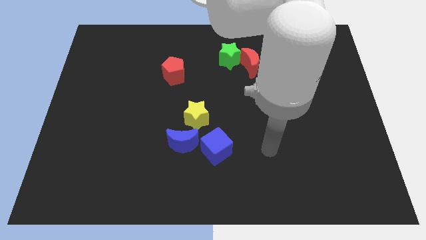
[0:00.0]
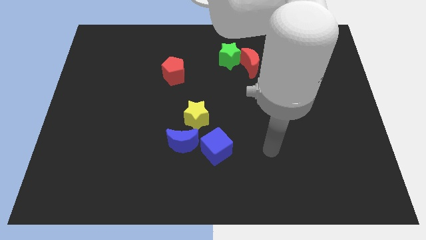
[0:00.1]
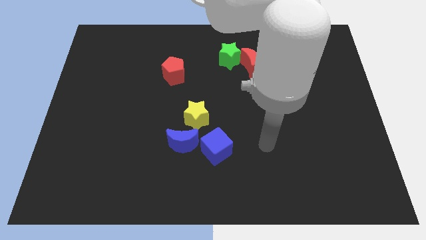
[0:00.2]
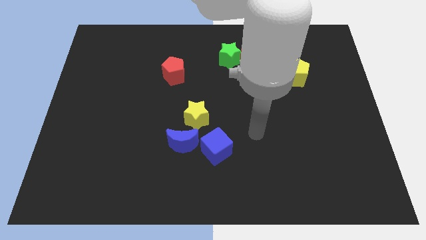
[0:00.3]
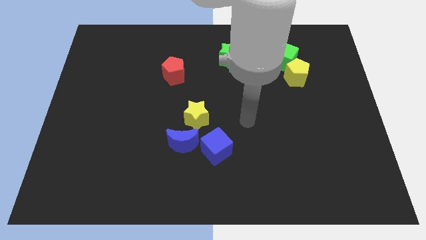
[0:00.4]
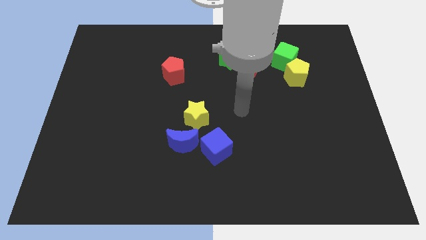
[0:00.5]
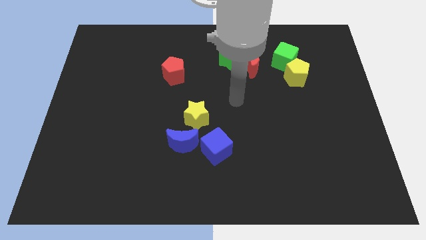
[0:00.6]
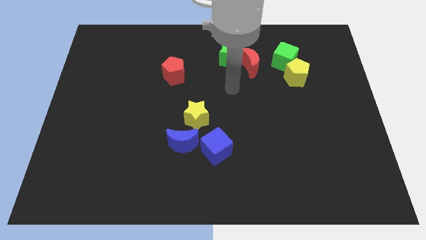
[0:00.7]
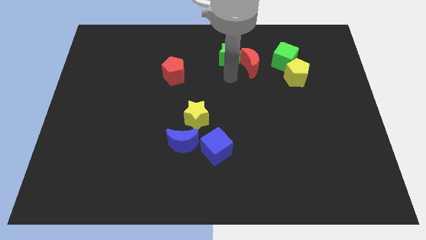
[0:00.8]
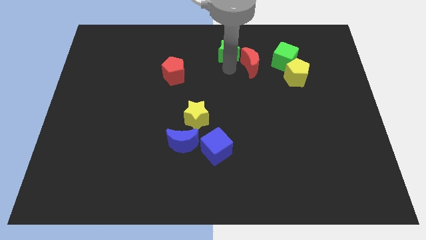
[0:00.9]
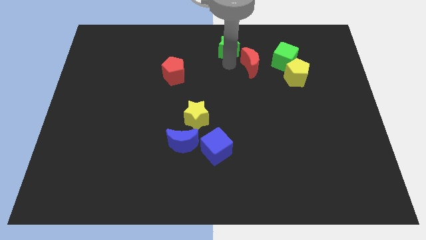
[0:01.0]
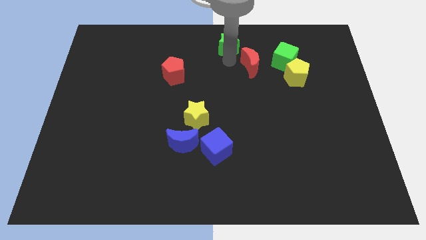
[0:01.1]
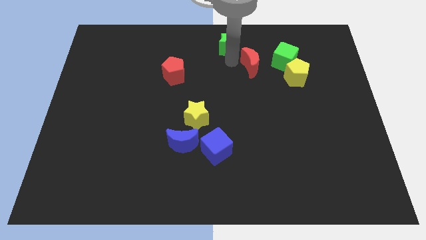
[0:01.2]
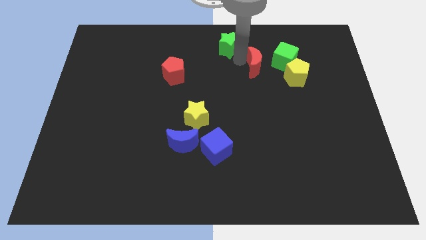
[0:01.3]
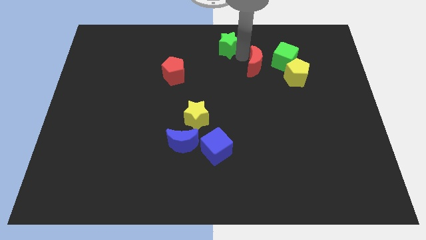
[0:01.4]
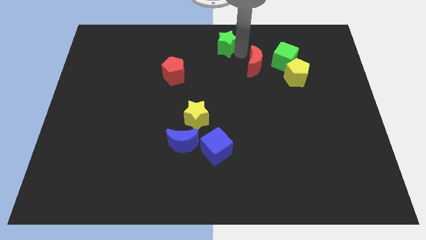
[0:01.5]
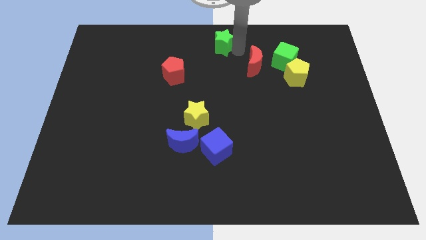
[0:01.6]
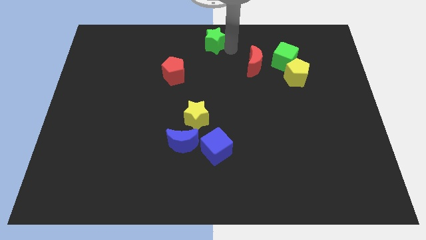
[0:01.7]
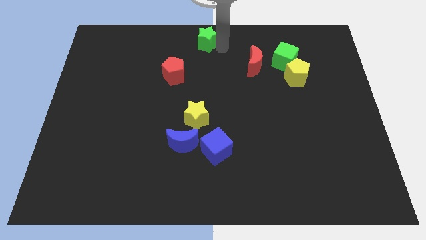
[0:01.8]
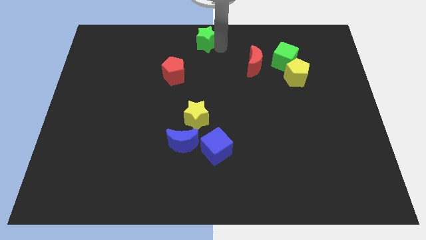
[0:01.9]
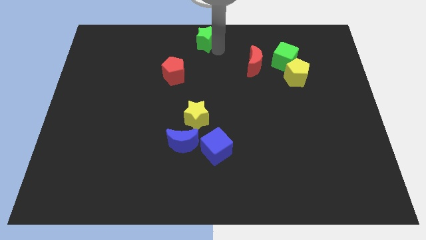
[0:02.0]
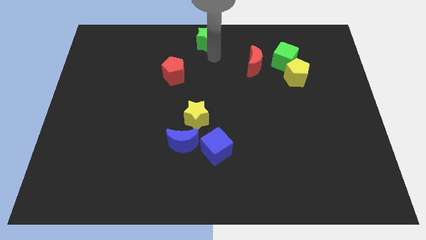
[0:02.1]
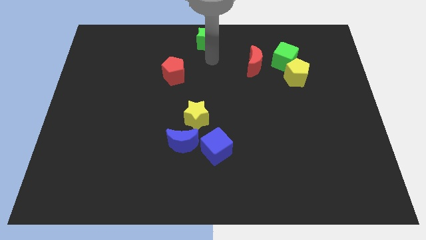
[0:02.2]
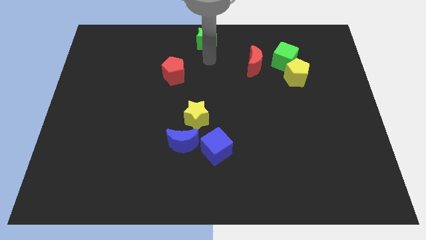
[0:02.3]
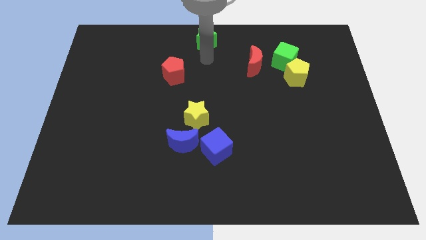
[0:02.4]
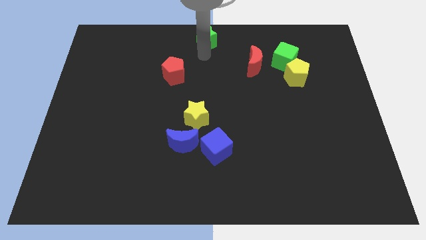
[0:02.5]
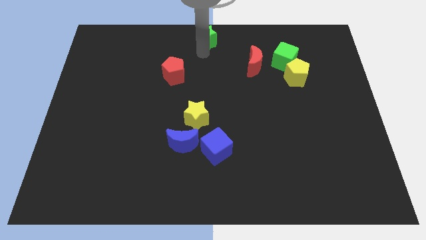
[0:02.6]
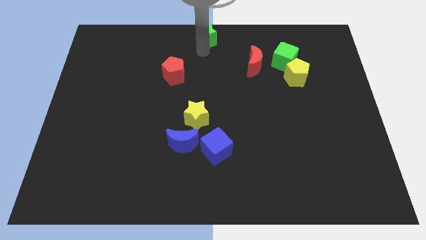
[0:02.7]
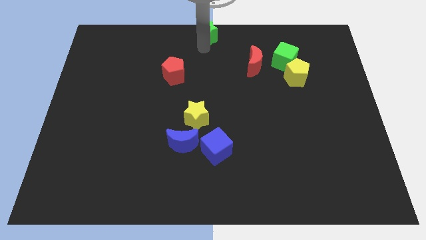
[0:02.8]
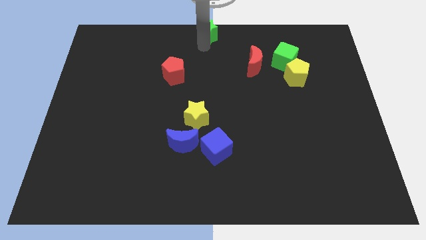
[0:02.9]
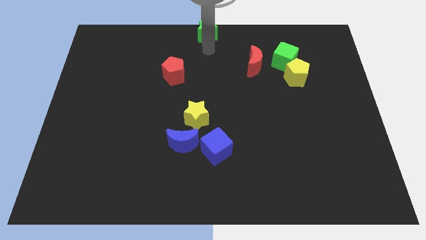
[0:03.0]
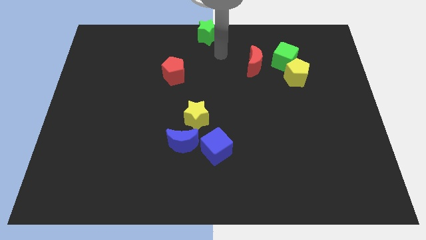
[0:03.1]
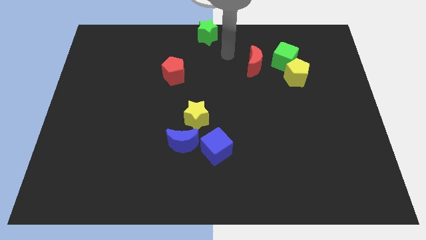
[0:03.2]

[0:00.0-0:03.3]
place the green star at top center of the board

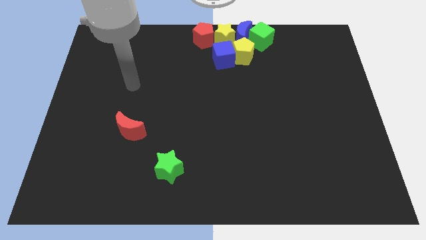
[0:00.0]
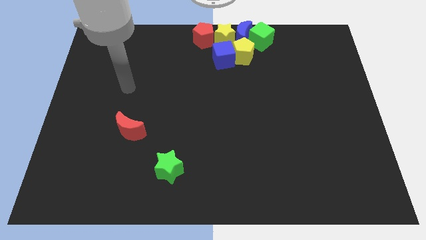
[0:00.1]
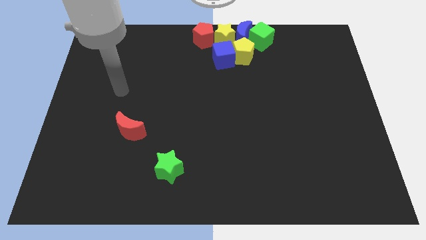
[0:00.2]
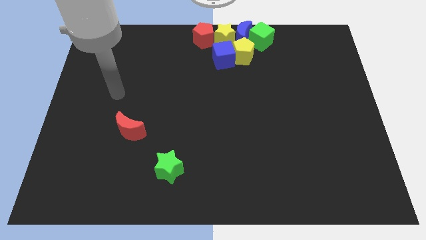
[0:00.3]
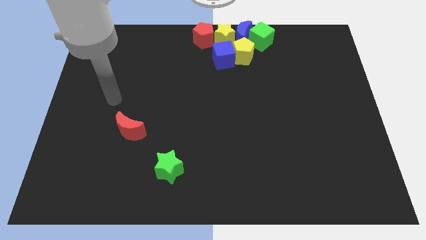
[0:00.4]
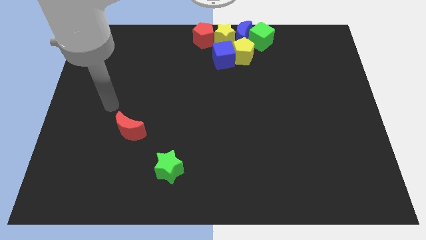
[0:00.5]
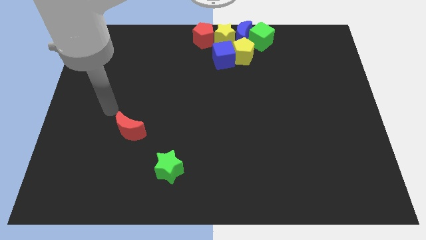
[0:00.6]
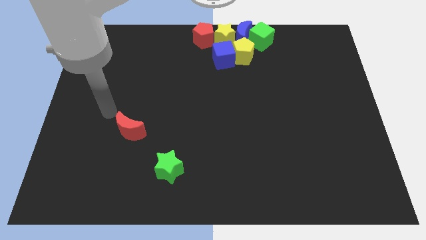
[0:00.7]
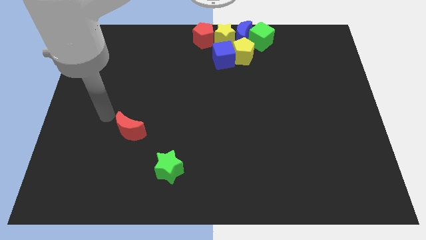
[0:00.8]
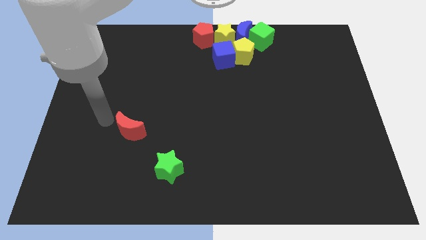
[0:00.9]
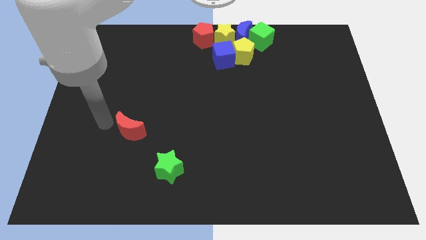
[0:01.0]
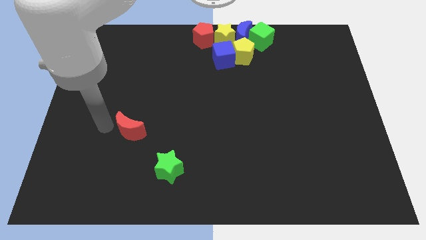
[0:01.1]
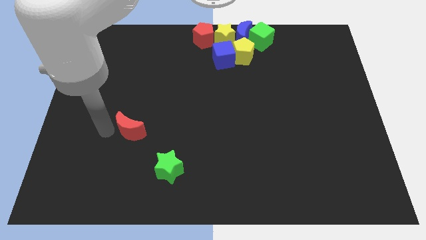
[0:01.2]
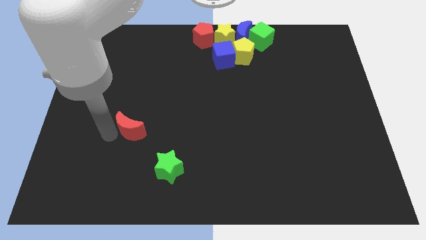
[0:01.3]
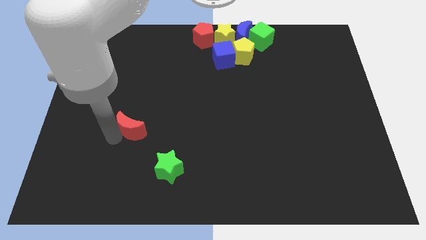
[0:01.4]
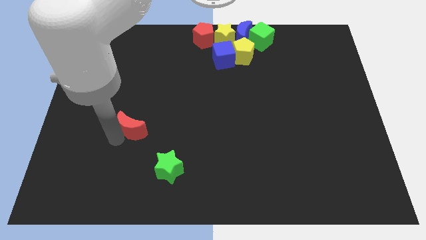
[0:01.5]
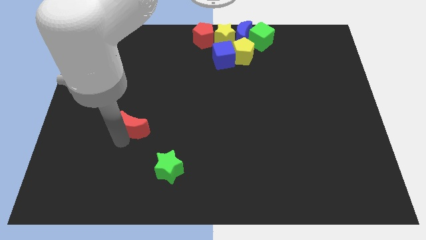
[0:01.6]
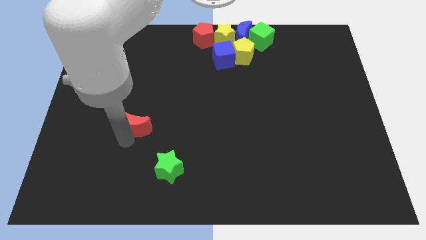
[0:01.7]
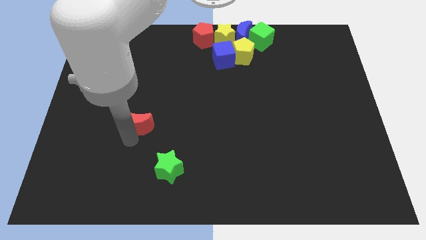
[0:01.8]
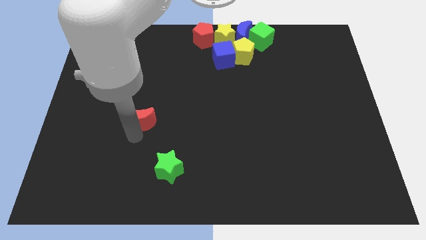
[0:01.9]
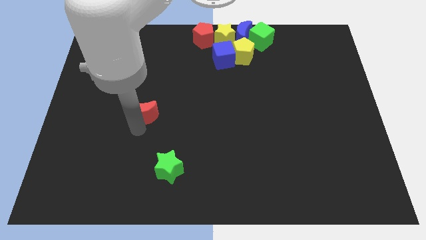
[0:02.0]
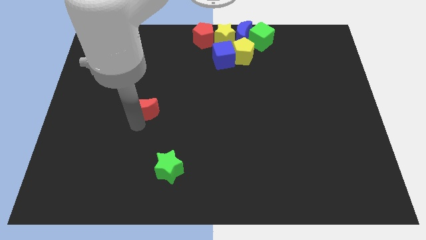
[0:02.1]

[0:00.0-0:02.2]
slide the red moon slightly towards the top

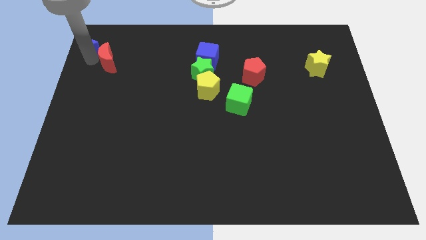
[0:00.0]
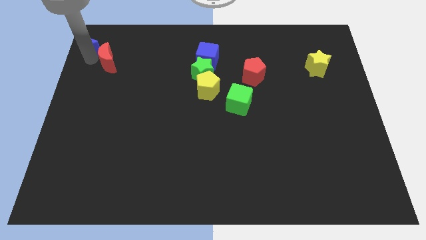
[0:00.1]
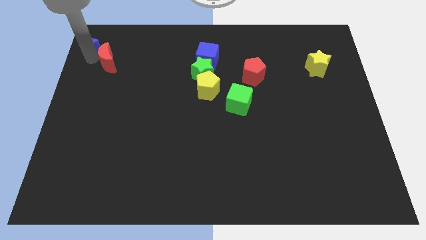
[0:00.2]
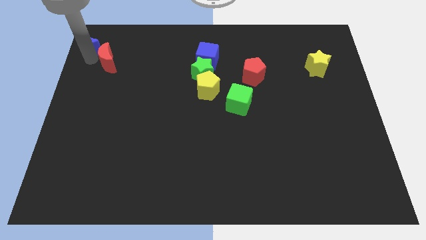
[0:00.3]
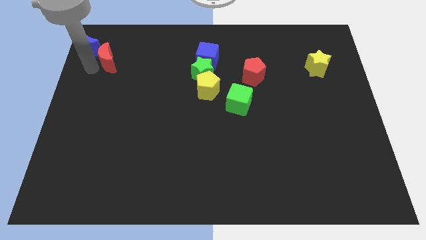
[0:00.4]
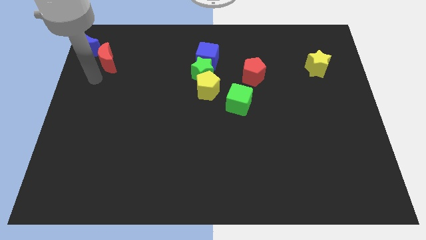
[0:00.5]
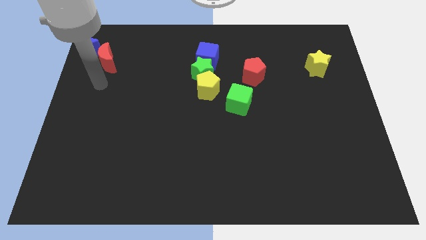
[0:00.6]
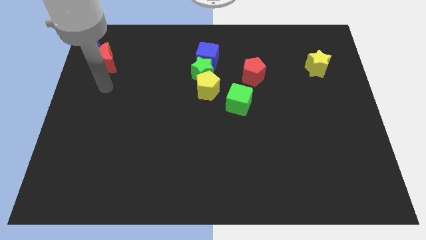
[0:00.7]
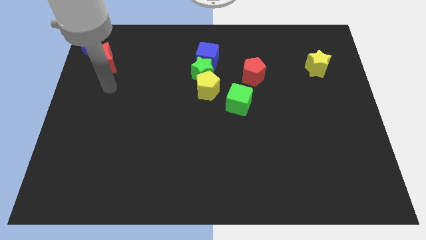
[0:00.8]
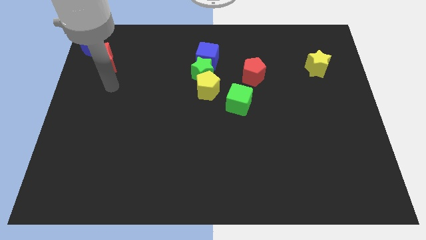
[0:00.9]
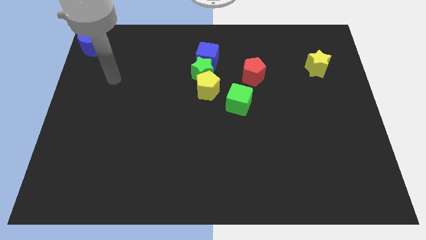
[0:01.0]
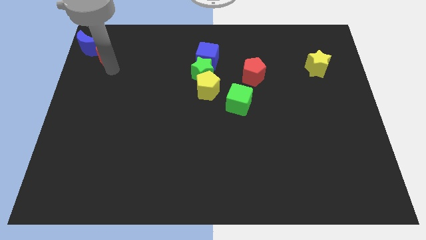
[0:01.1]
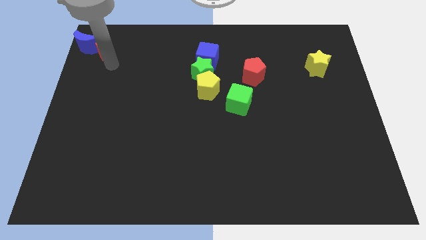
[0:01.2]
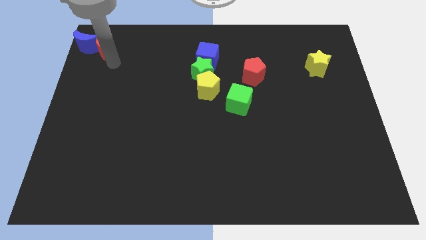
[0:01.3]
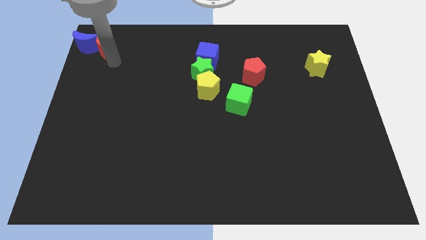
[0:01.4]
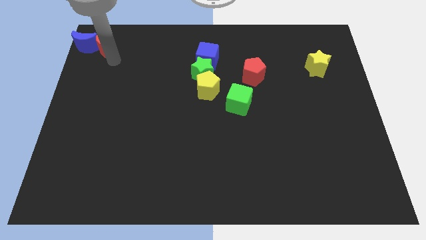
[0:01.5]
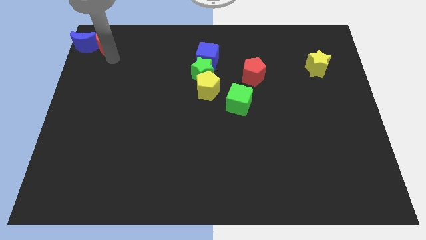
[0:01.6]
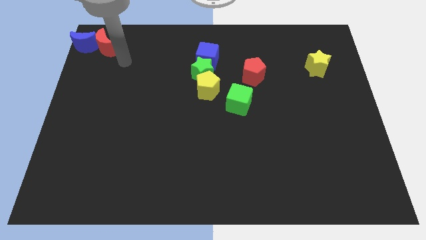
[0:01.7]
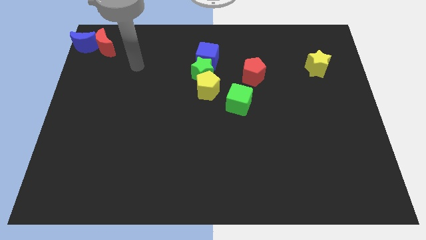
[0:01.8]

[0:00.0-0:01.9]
move the blue crescent and red crescent towards the top left of the board

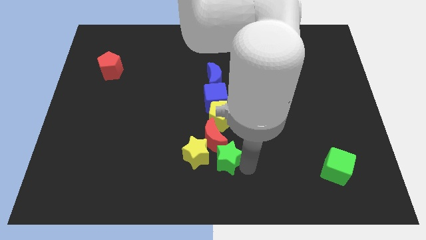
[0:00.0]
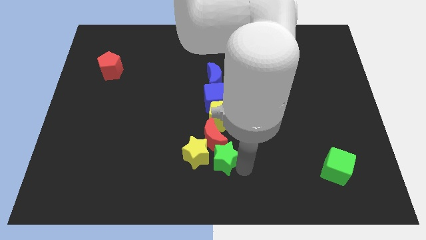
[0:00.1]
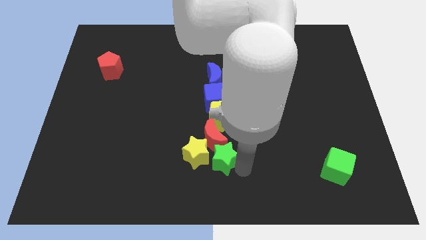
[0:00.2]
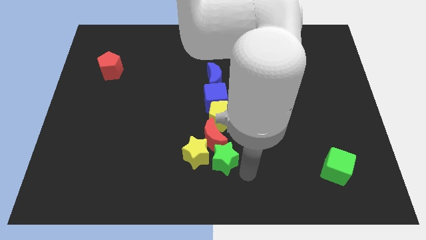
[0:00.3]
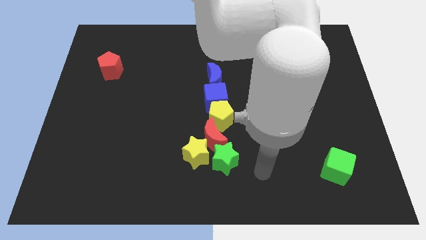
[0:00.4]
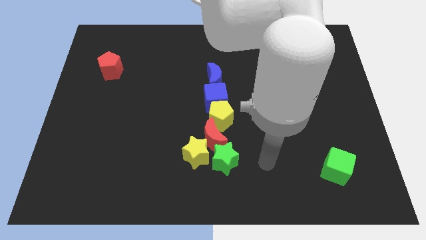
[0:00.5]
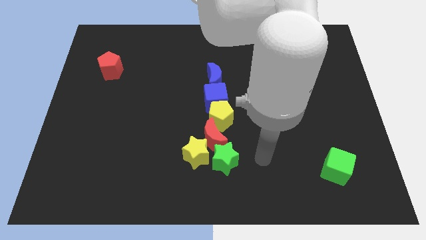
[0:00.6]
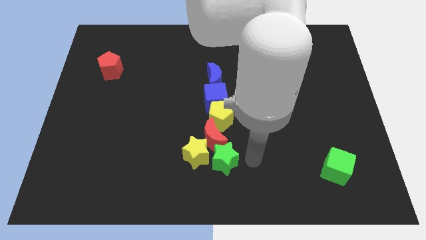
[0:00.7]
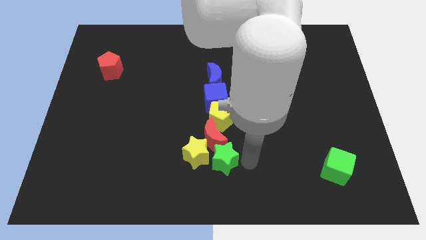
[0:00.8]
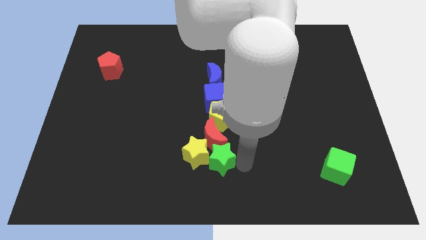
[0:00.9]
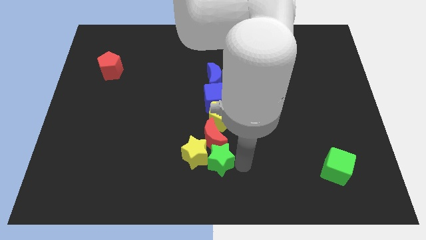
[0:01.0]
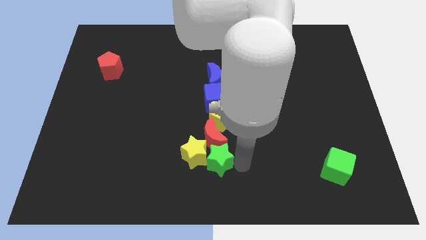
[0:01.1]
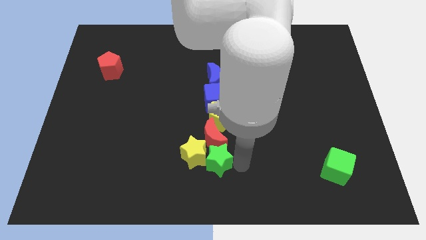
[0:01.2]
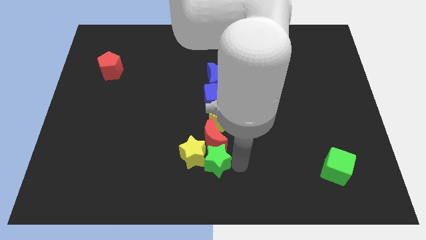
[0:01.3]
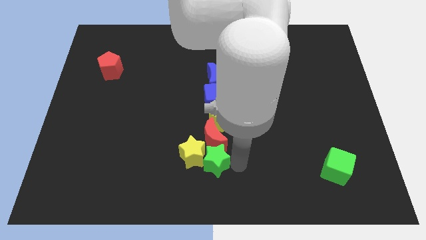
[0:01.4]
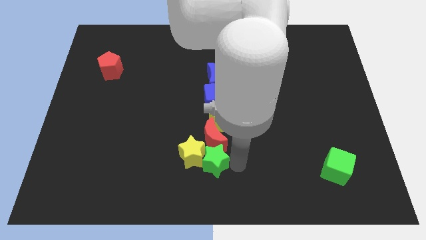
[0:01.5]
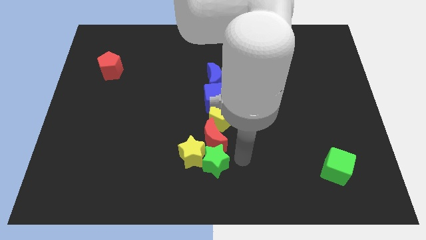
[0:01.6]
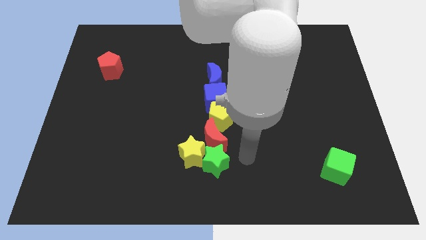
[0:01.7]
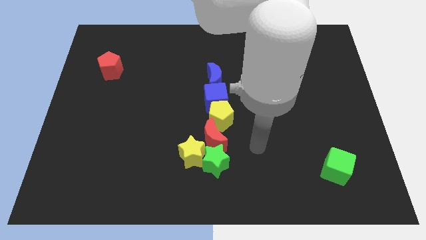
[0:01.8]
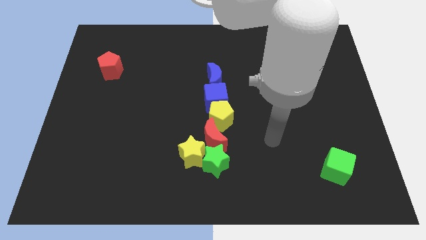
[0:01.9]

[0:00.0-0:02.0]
push the green star into yellow star to the right
